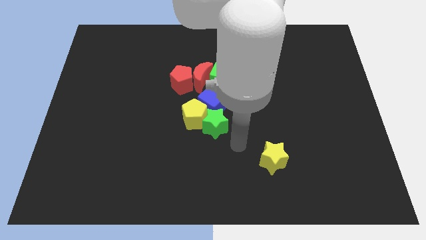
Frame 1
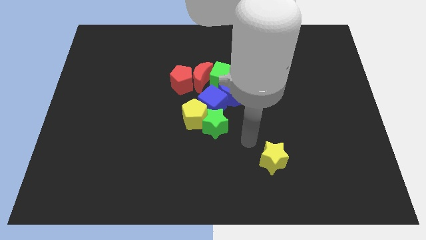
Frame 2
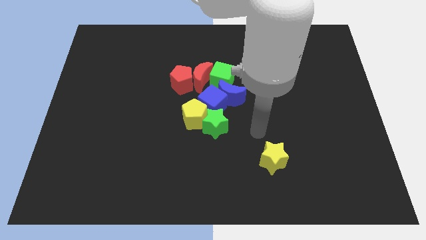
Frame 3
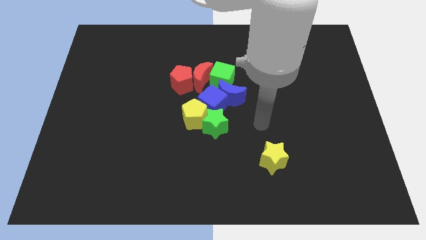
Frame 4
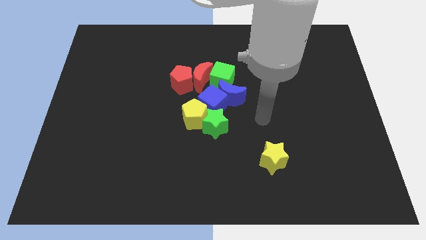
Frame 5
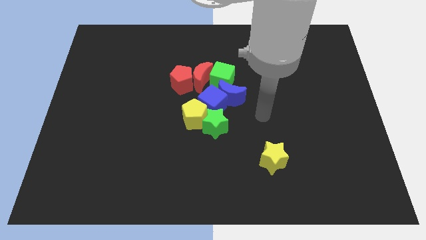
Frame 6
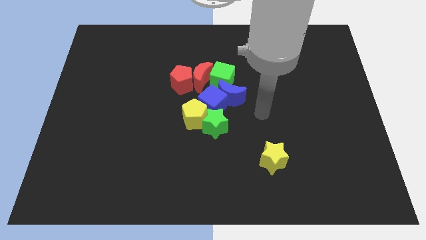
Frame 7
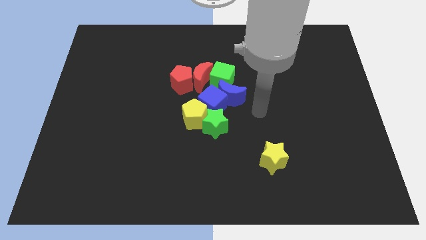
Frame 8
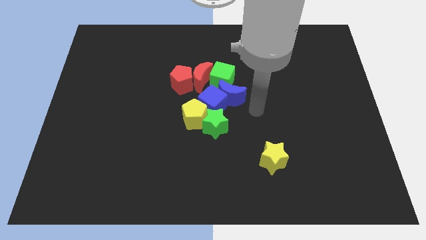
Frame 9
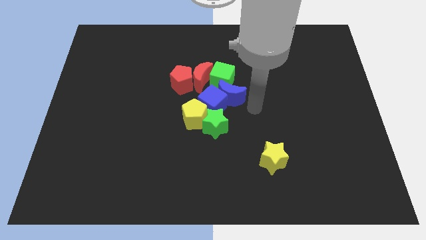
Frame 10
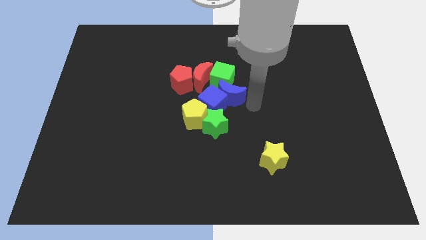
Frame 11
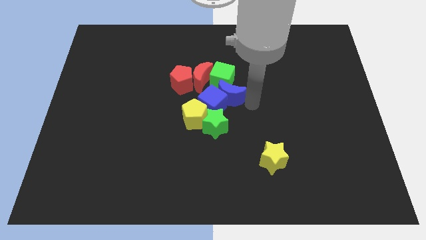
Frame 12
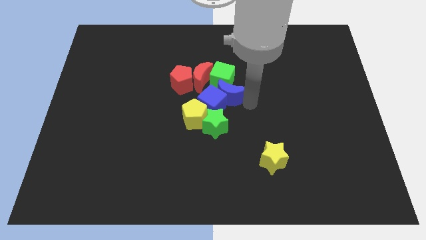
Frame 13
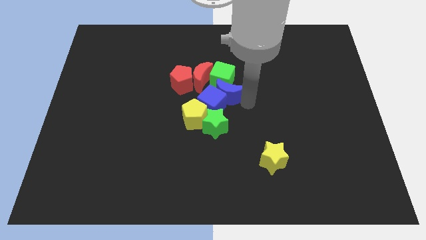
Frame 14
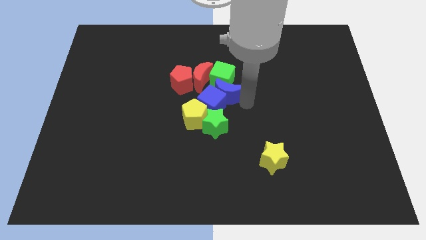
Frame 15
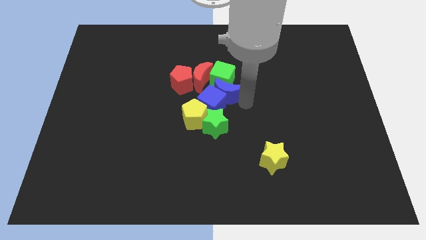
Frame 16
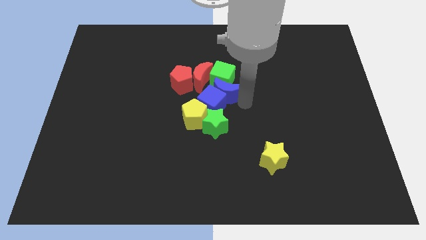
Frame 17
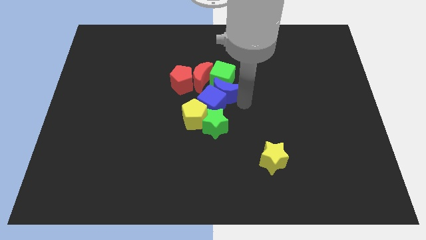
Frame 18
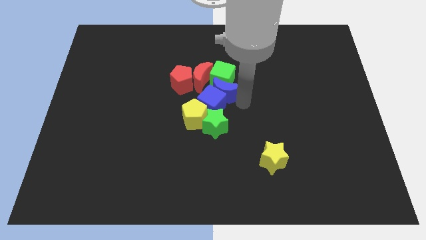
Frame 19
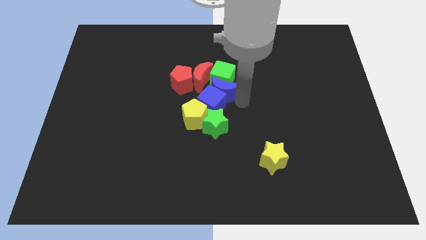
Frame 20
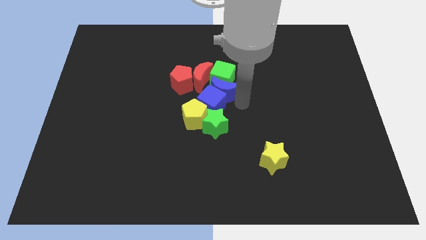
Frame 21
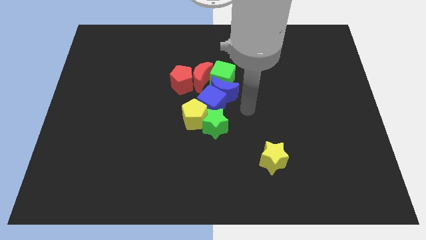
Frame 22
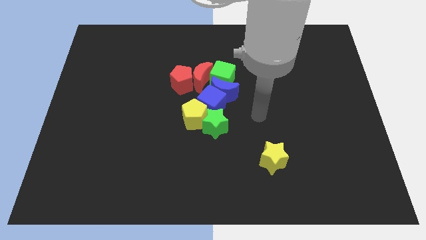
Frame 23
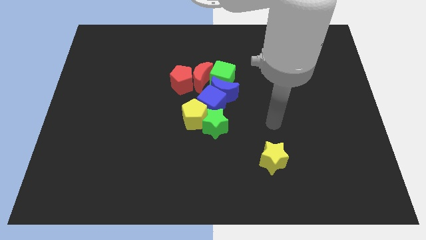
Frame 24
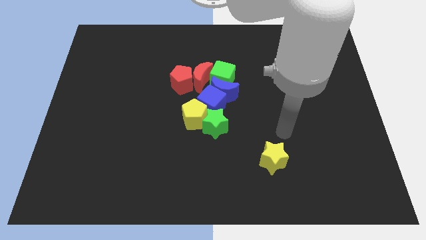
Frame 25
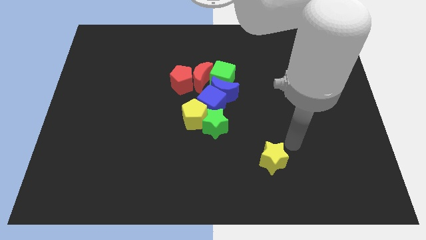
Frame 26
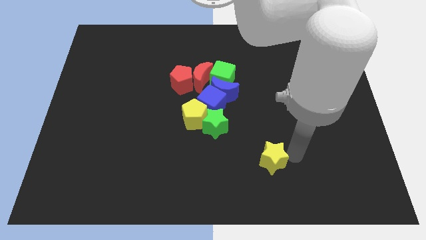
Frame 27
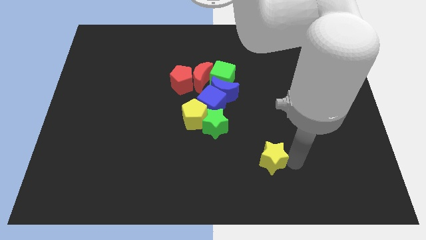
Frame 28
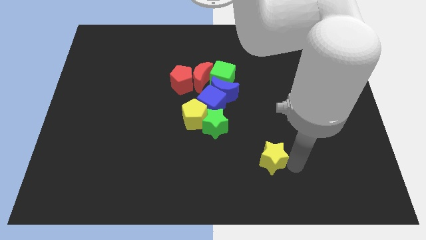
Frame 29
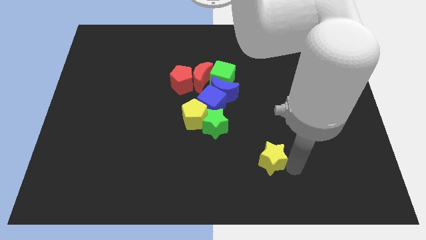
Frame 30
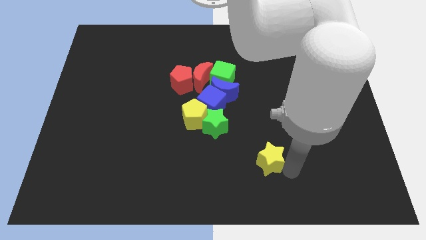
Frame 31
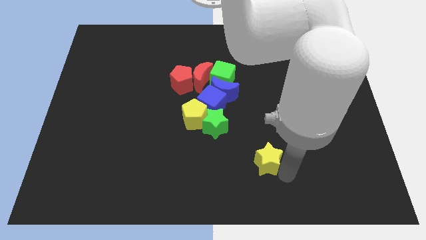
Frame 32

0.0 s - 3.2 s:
push the blue moon in between green cube and blue cube

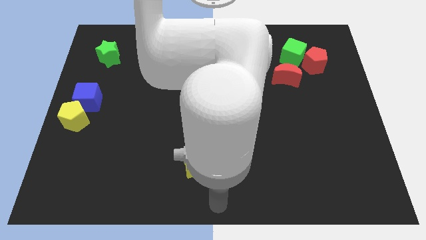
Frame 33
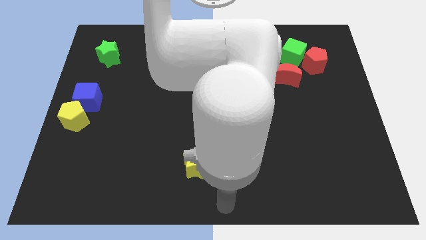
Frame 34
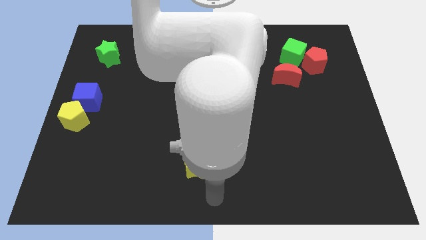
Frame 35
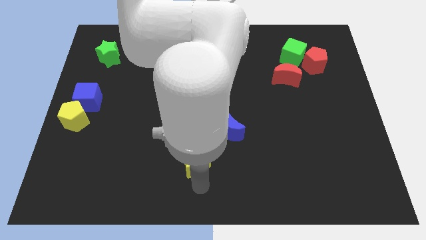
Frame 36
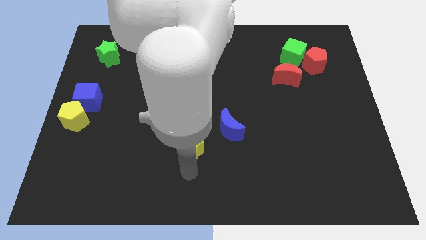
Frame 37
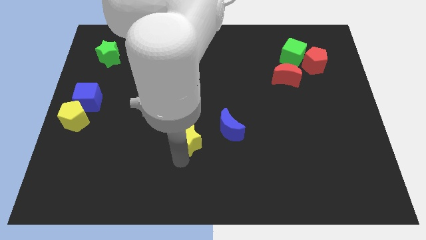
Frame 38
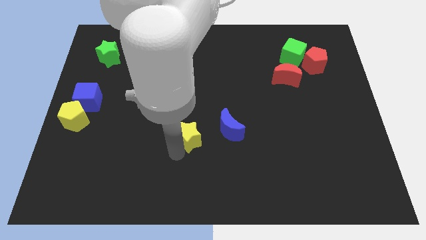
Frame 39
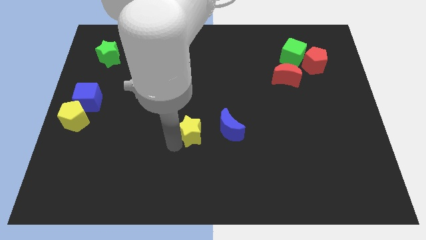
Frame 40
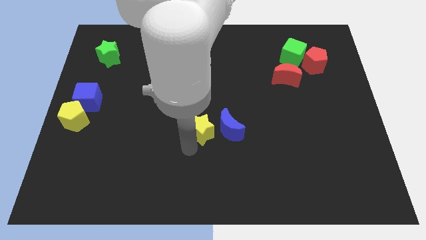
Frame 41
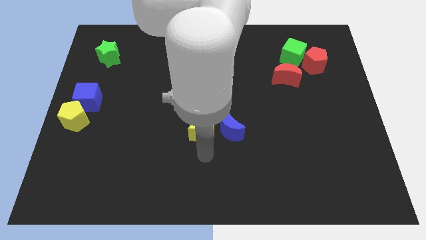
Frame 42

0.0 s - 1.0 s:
move the yellow star parallel left to the blue moon

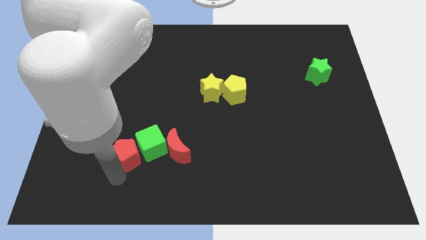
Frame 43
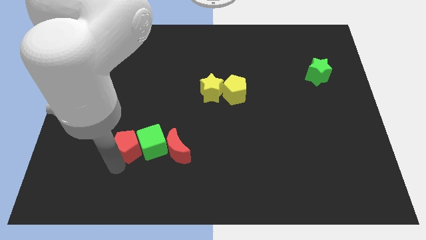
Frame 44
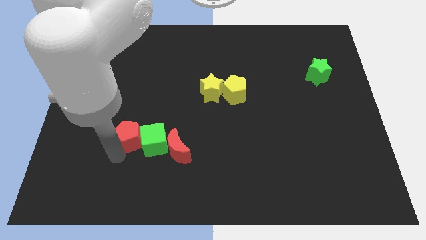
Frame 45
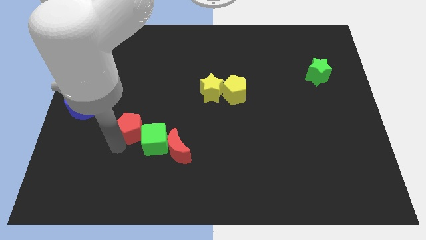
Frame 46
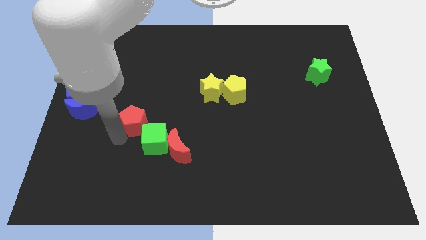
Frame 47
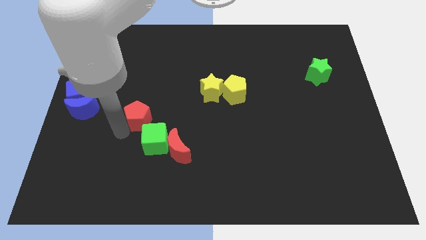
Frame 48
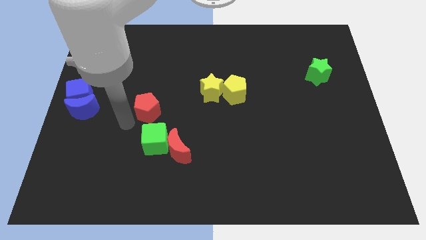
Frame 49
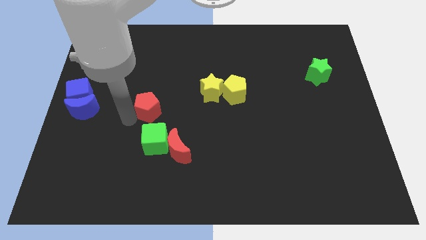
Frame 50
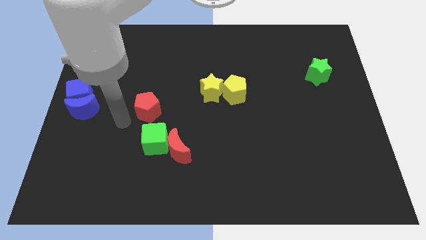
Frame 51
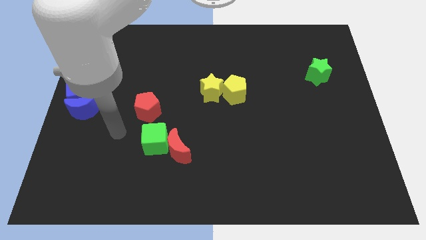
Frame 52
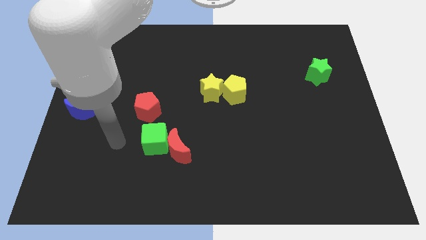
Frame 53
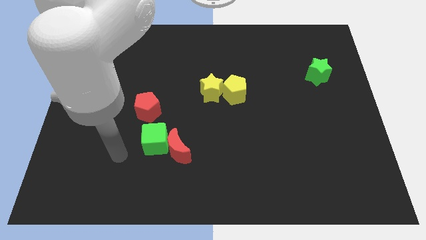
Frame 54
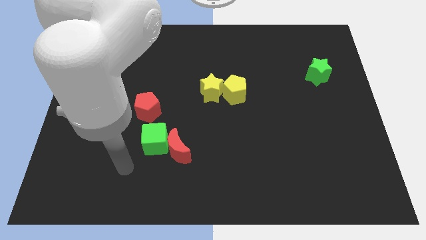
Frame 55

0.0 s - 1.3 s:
move the red pentagon slightly upwards

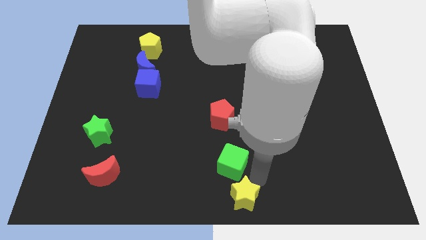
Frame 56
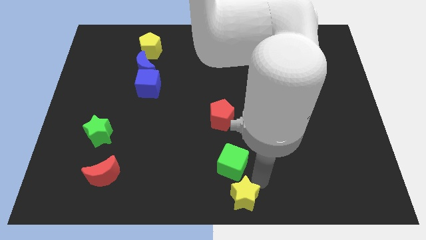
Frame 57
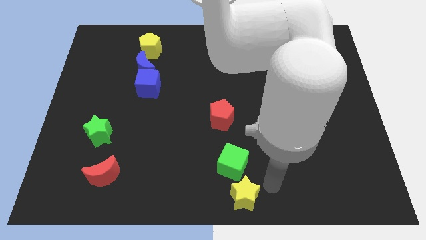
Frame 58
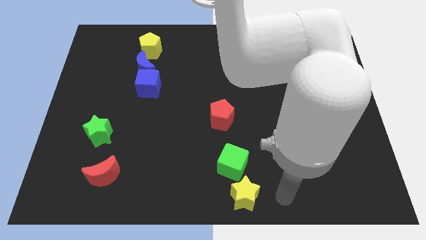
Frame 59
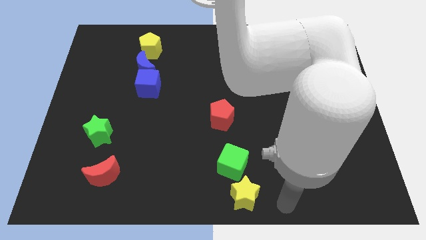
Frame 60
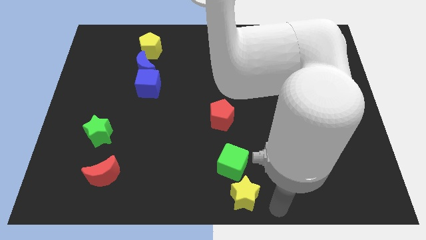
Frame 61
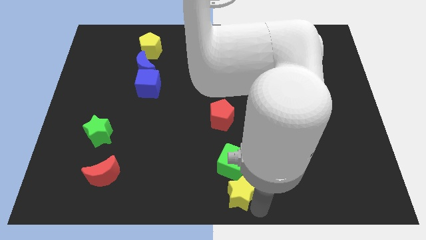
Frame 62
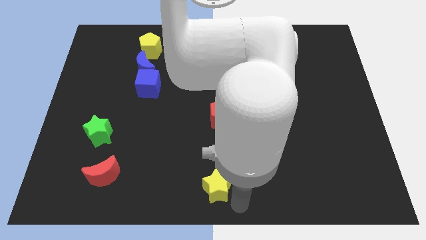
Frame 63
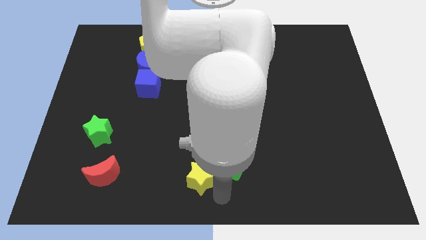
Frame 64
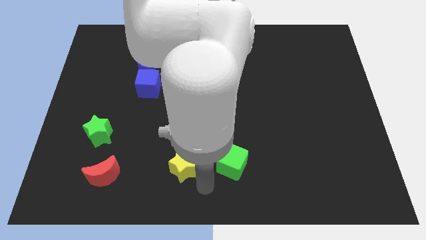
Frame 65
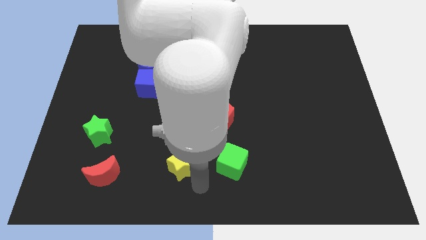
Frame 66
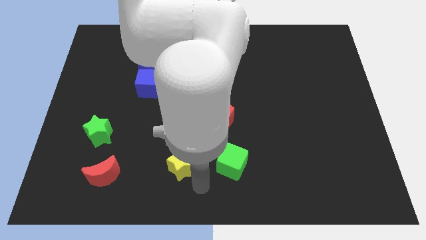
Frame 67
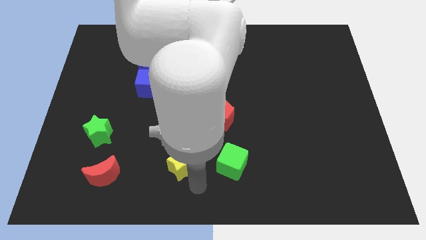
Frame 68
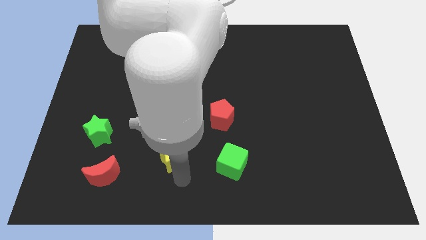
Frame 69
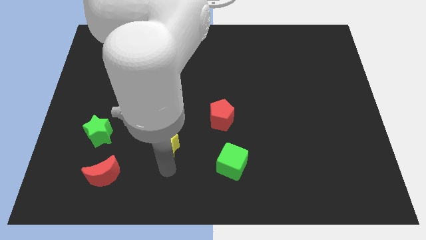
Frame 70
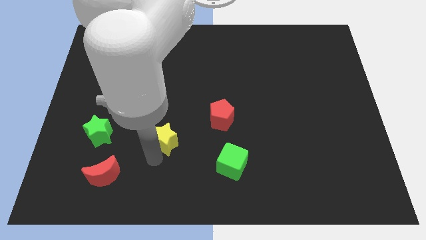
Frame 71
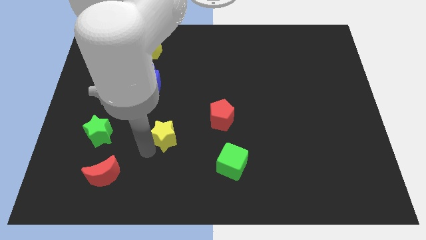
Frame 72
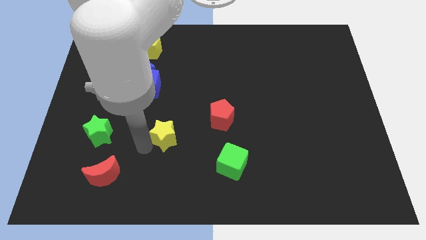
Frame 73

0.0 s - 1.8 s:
push the yellow star towards the green star

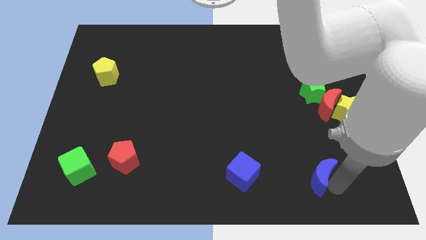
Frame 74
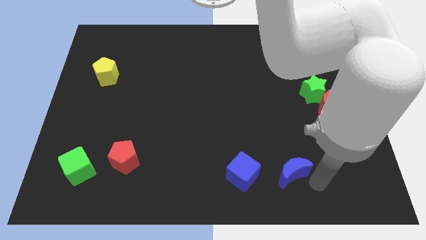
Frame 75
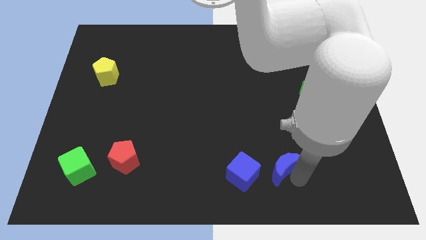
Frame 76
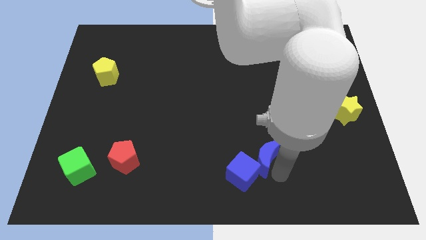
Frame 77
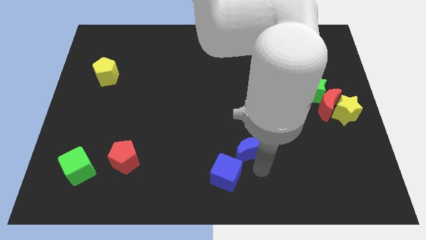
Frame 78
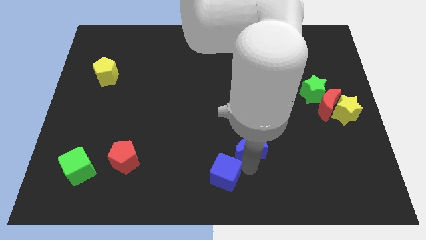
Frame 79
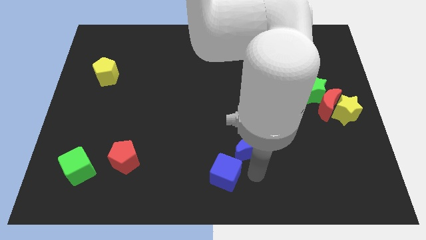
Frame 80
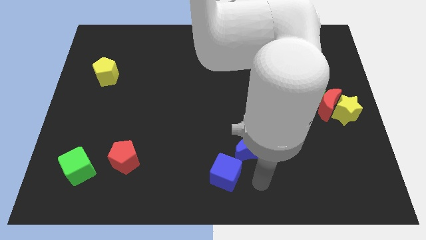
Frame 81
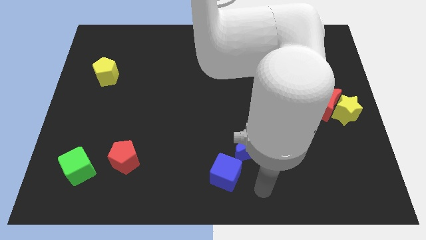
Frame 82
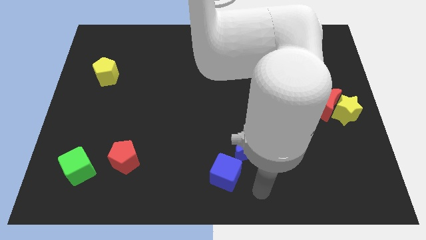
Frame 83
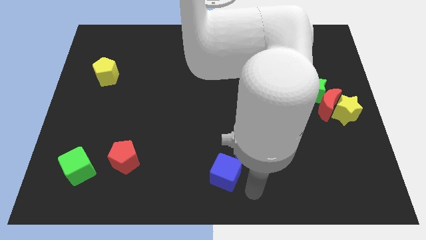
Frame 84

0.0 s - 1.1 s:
push blue crescent near blue cube

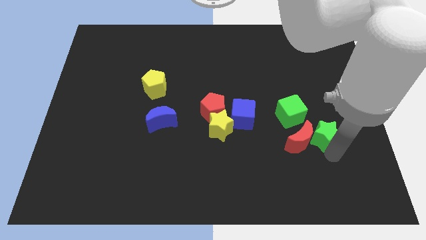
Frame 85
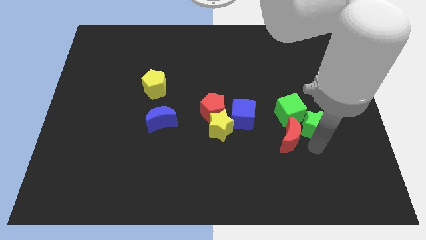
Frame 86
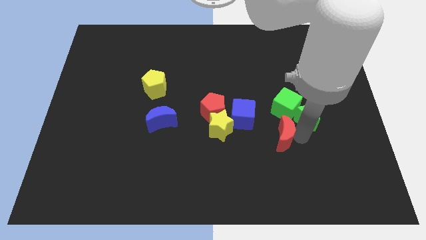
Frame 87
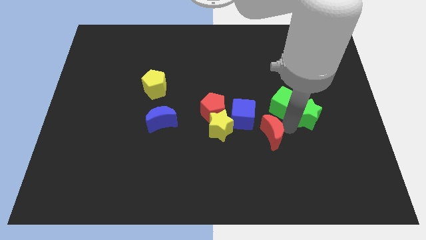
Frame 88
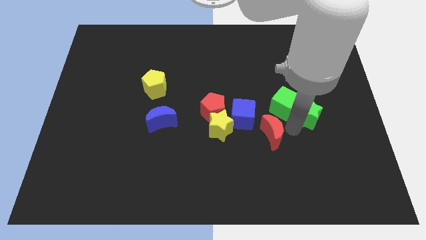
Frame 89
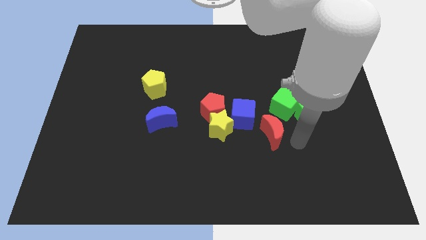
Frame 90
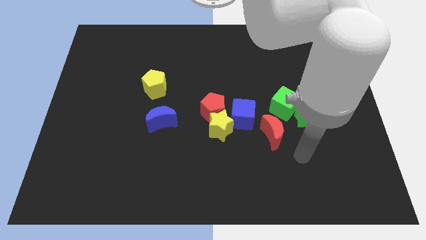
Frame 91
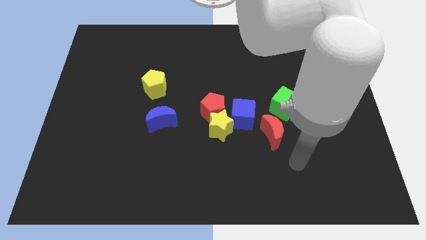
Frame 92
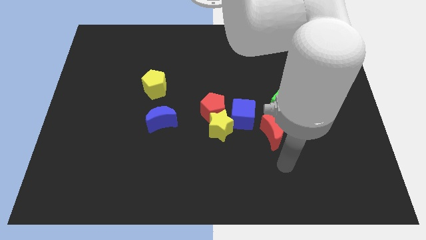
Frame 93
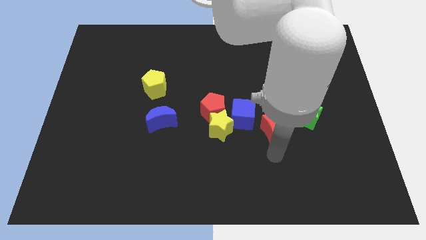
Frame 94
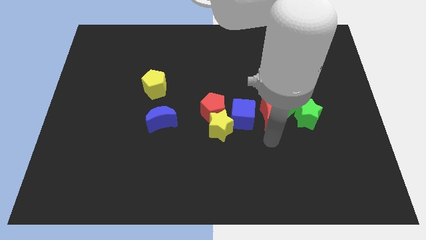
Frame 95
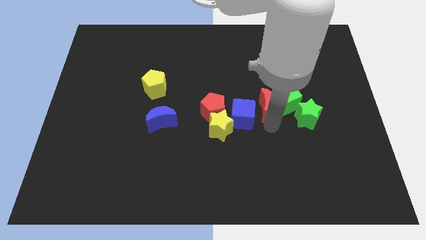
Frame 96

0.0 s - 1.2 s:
adjust green blocks and red pentagon to the right of the blue cube
